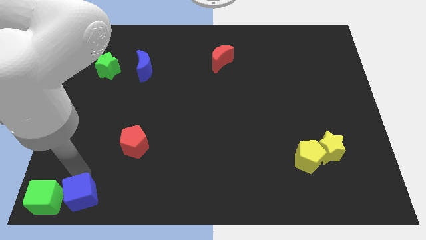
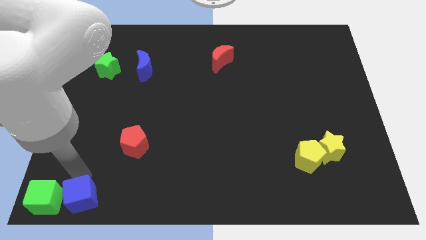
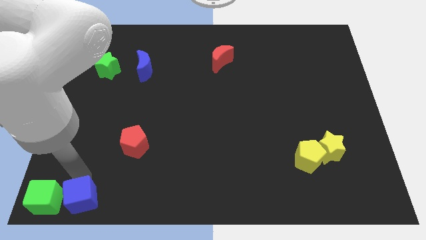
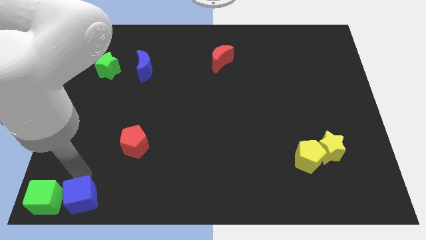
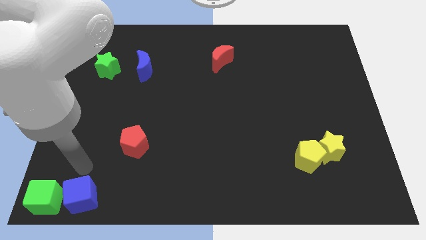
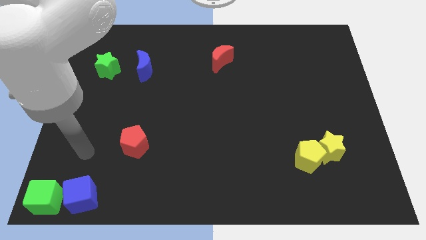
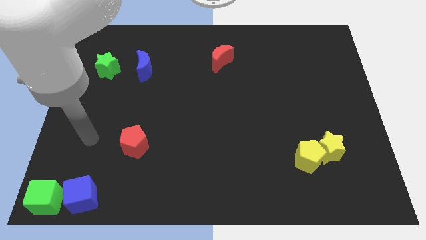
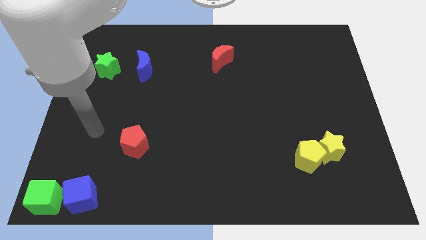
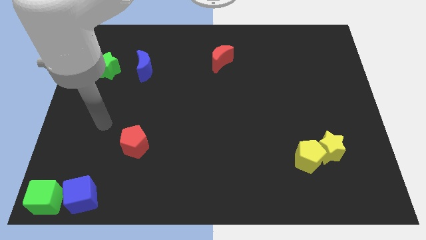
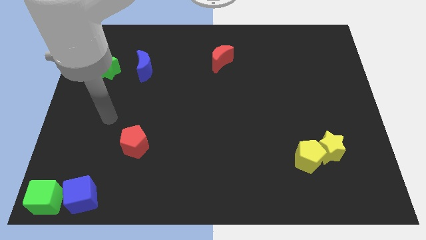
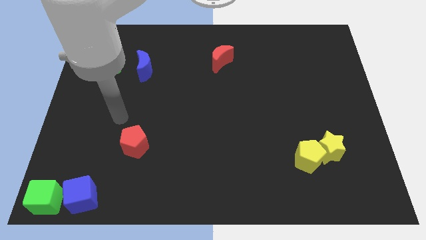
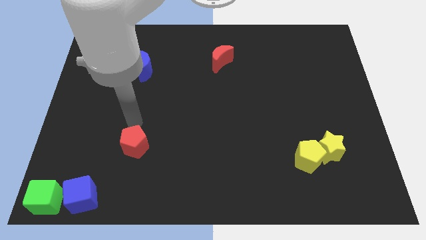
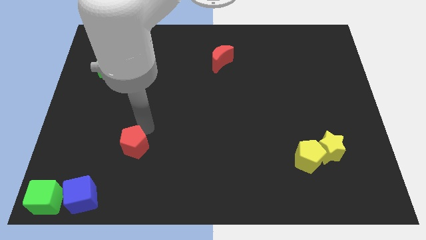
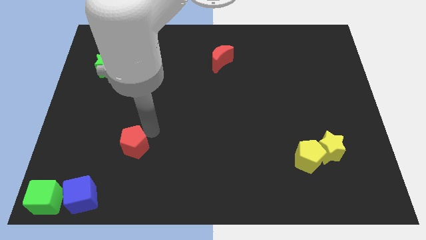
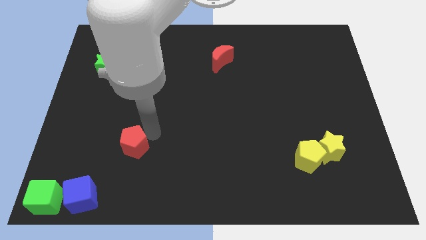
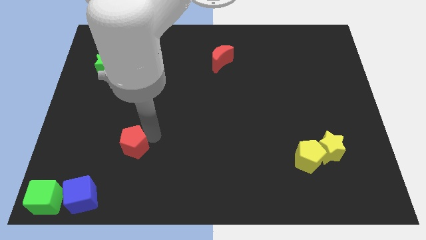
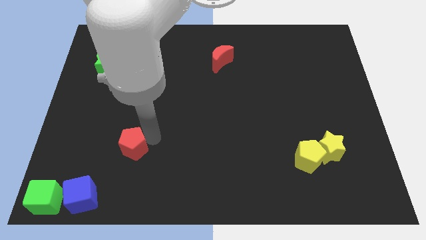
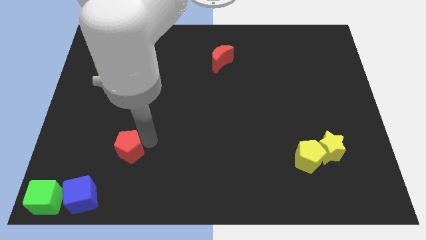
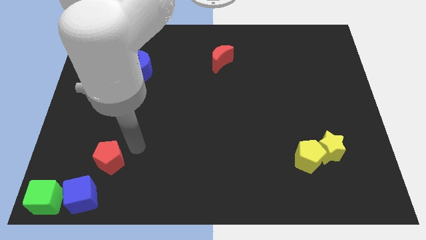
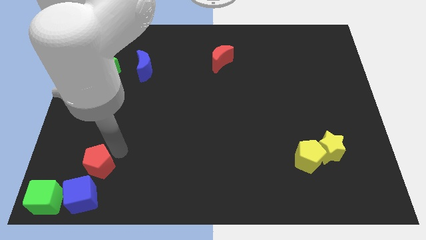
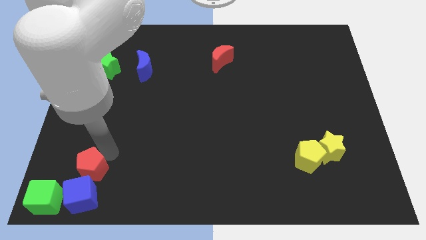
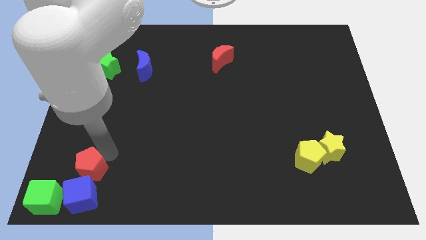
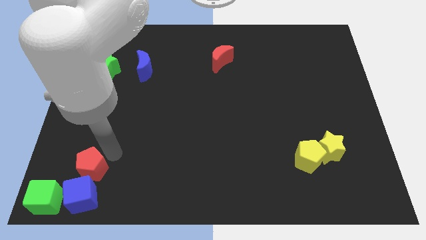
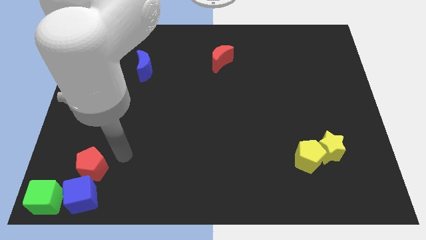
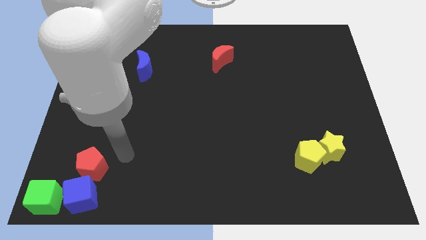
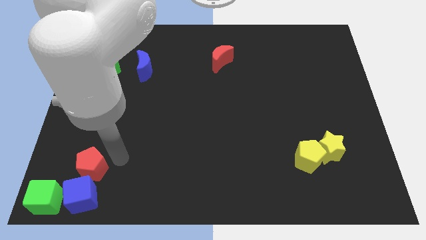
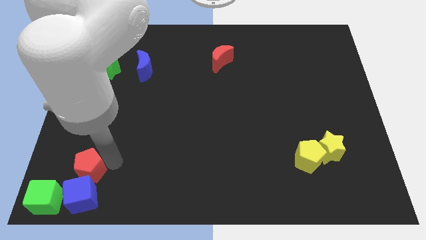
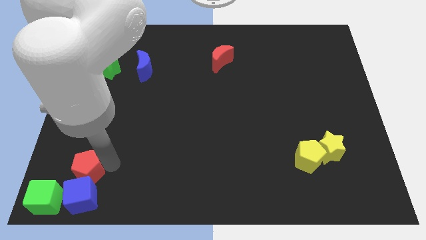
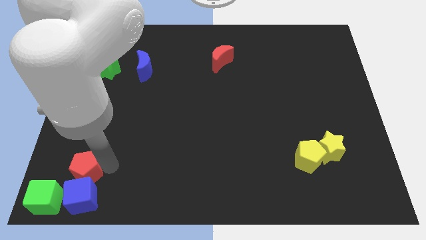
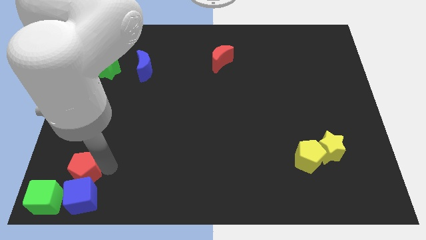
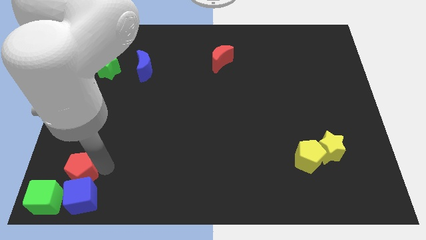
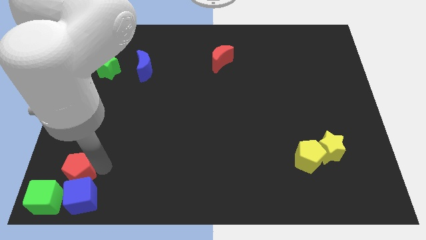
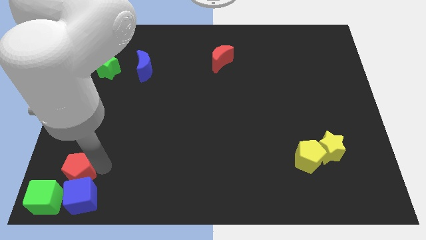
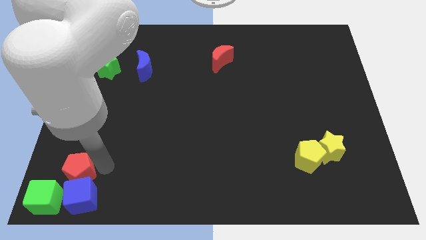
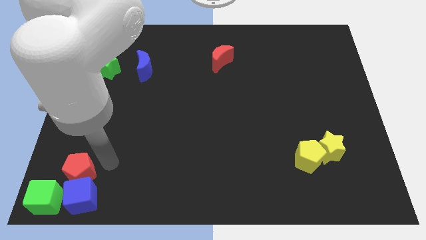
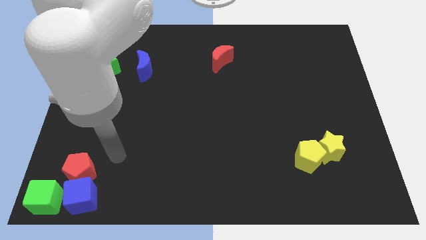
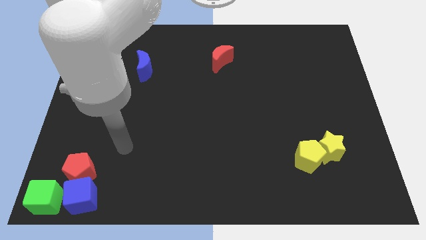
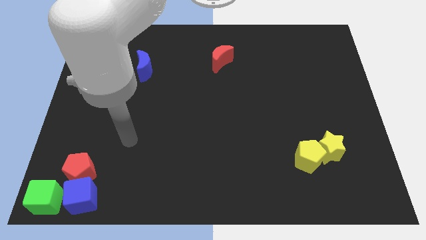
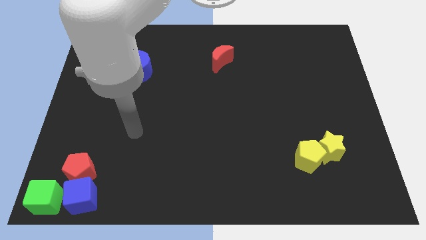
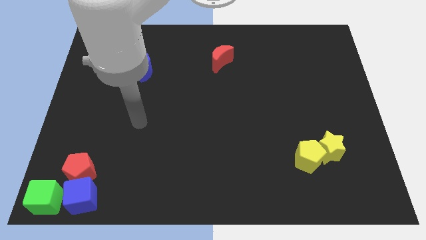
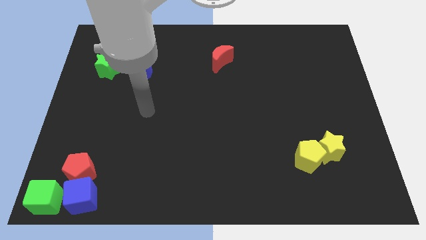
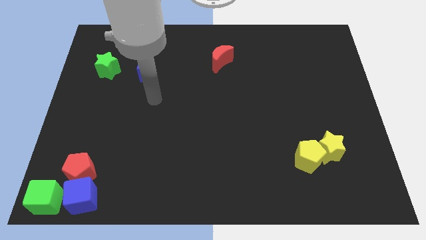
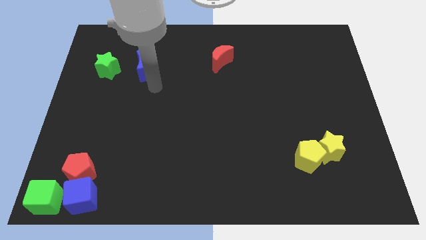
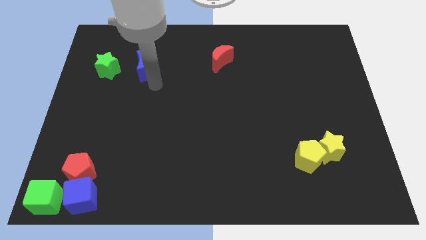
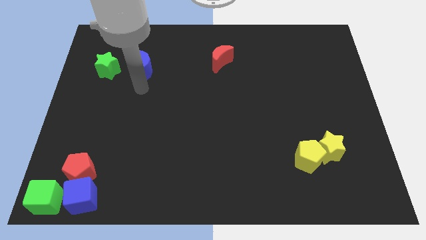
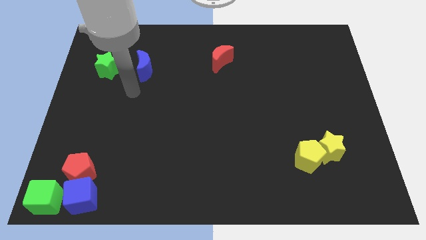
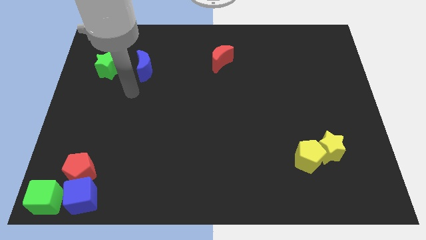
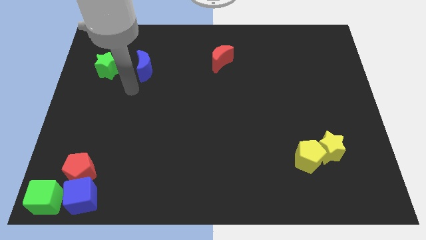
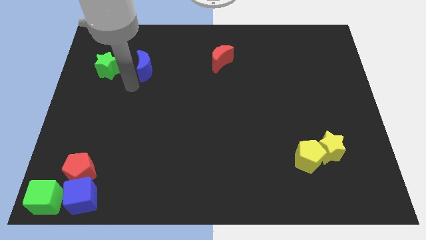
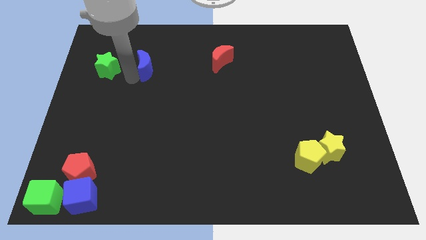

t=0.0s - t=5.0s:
push the red pentagon into the blue cube

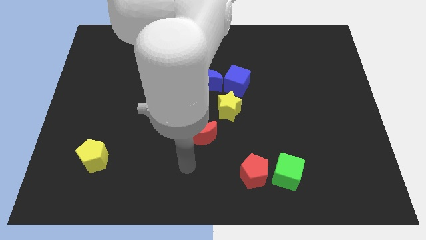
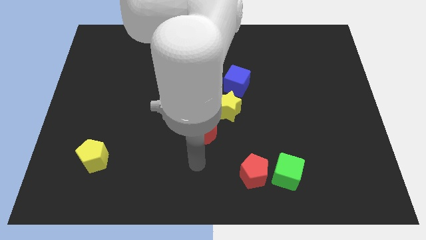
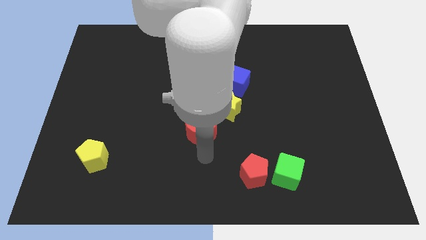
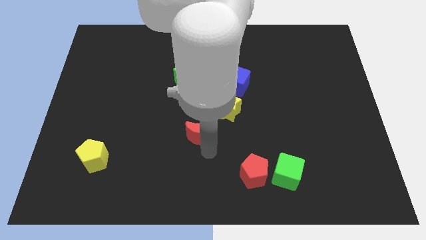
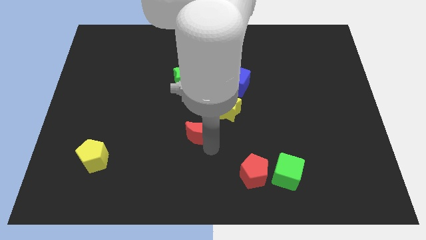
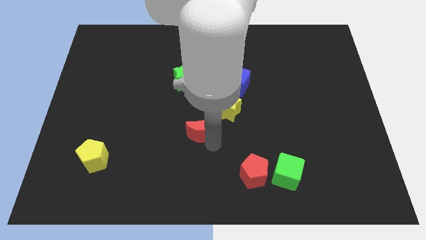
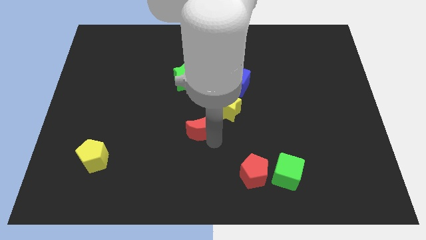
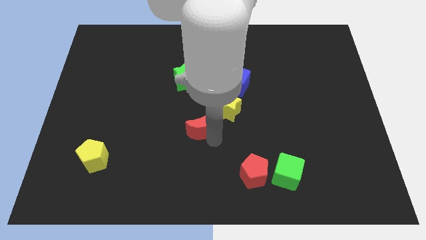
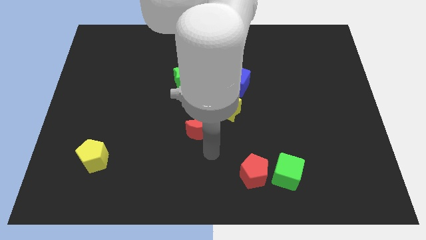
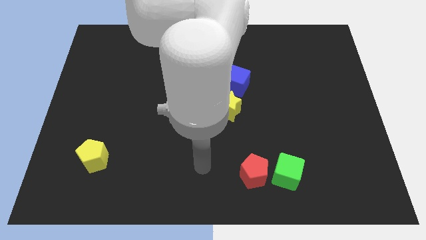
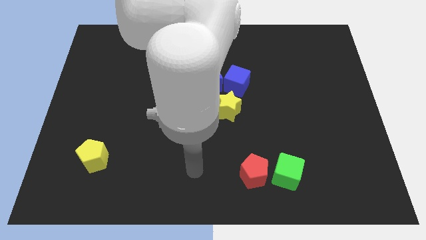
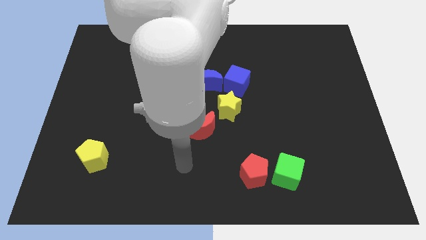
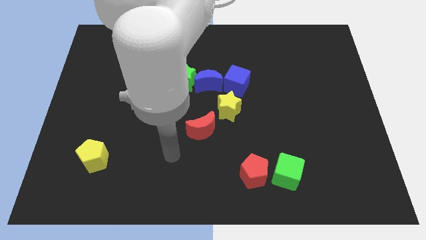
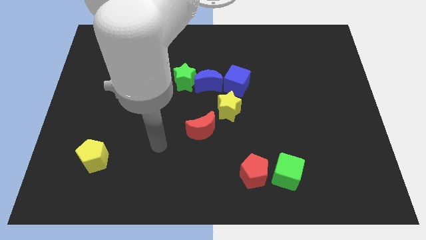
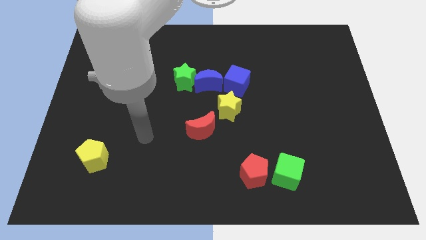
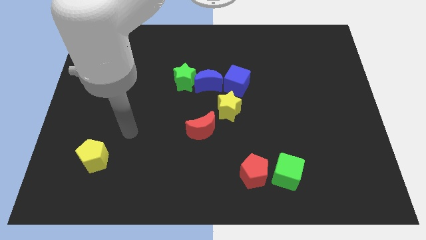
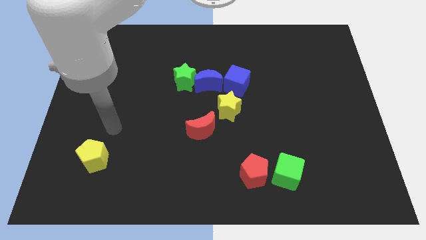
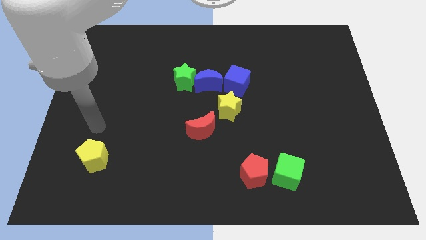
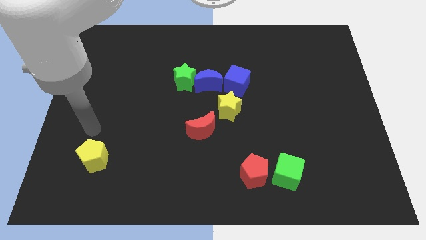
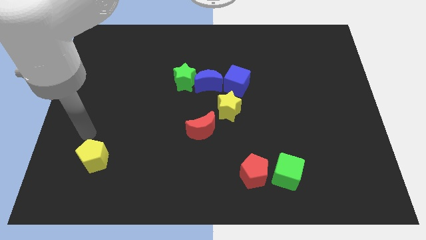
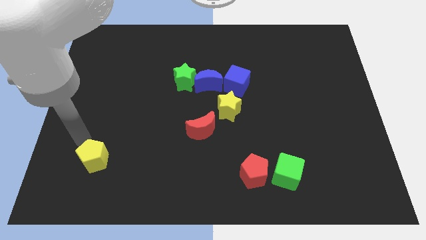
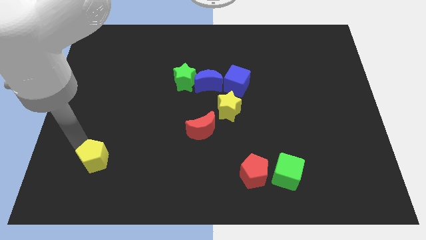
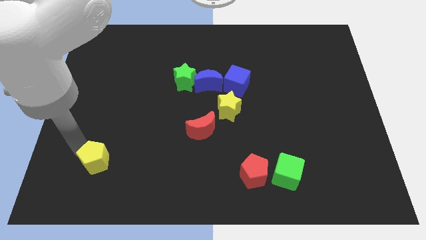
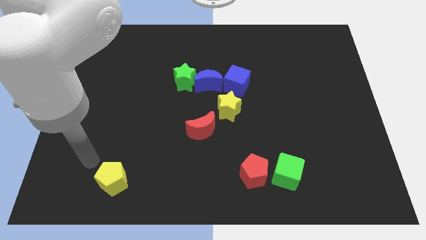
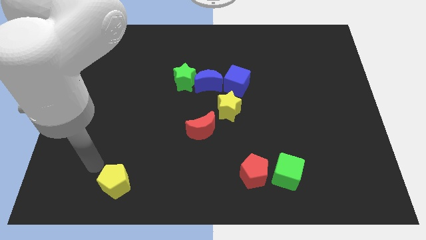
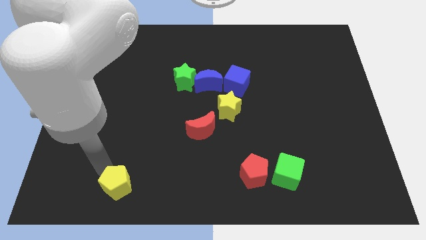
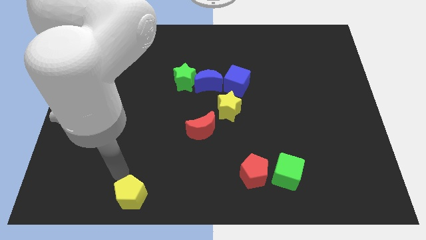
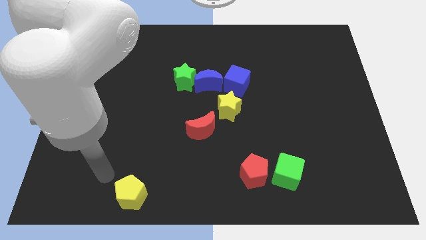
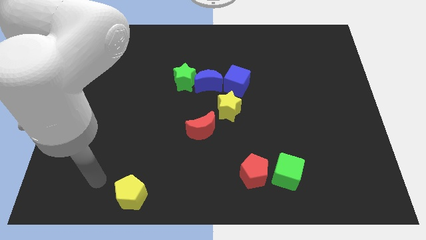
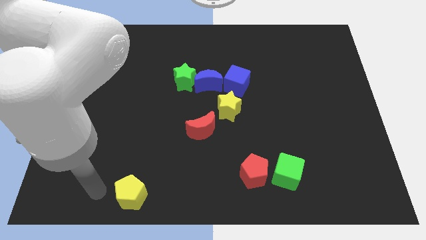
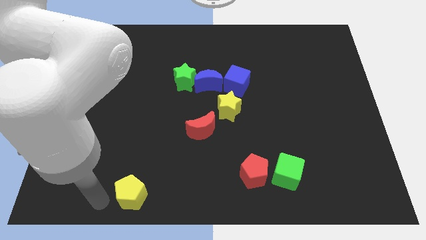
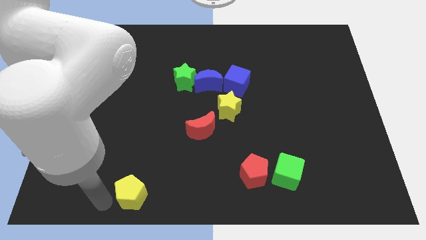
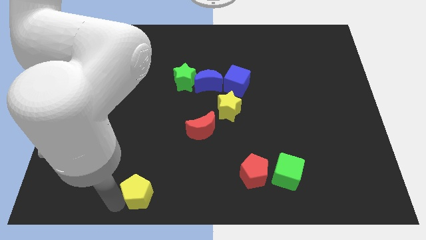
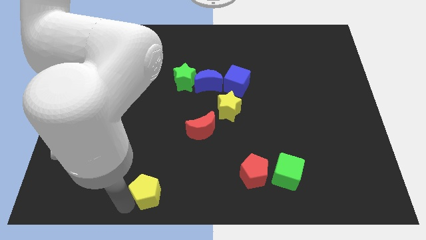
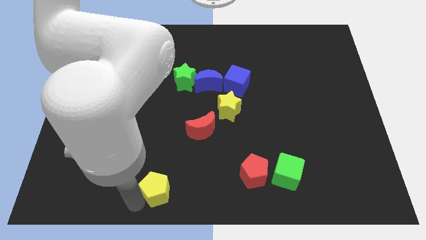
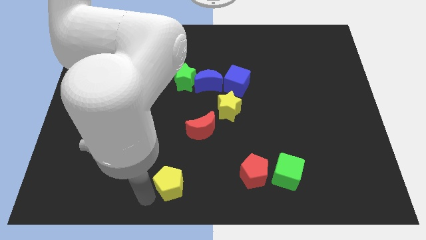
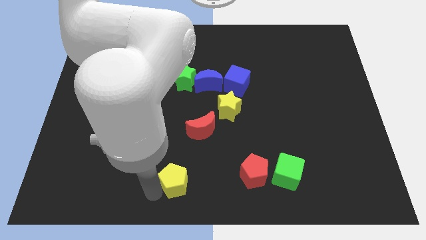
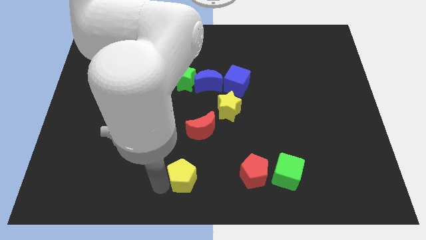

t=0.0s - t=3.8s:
push yellow pentagon below green star
